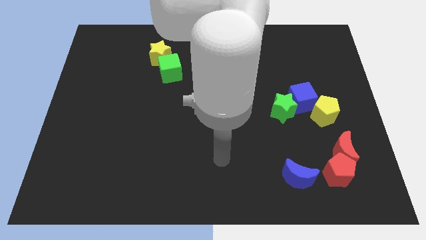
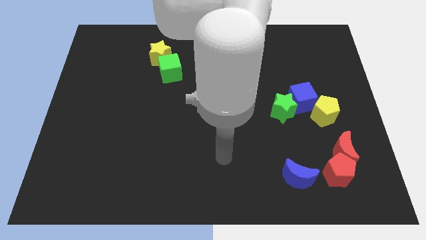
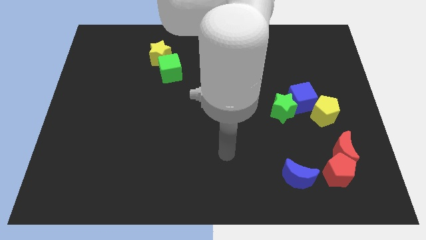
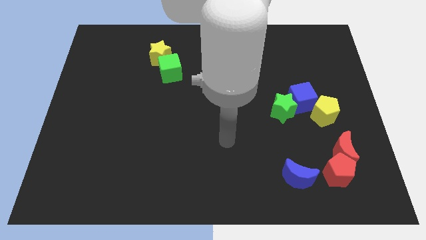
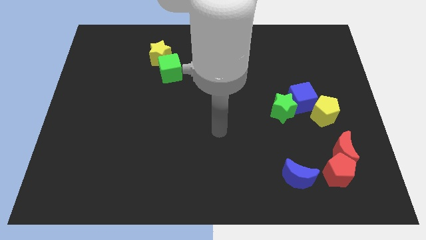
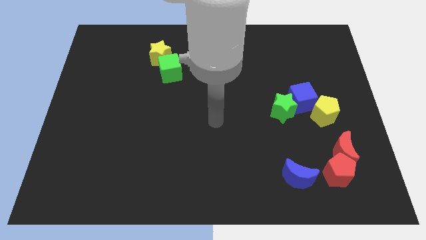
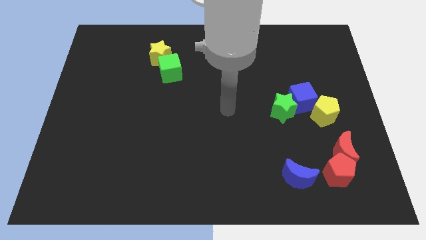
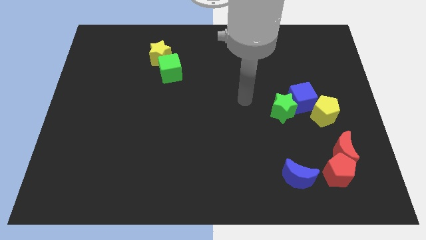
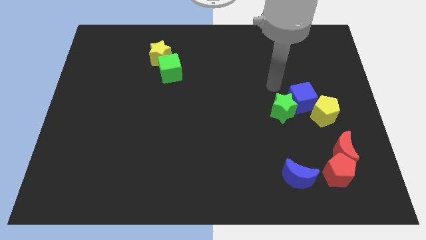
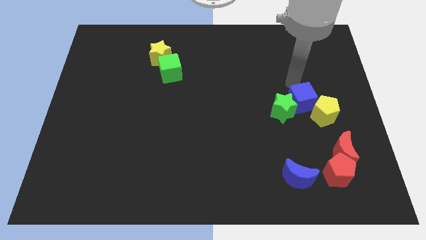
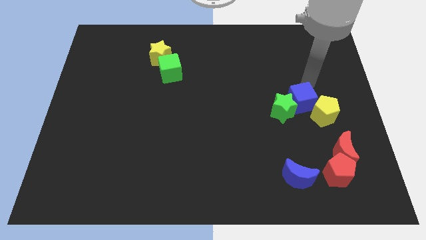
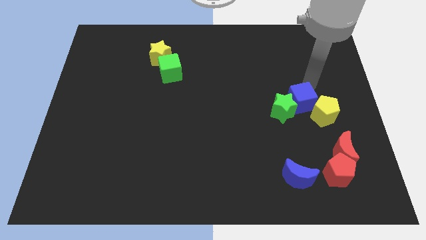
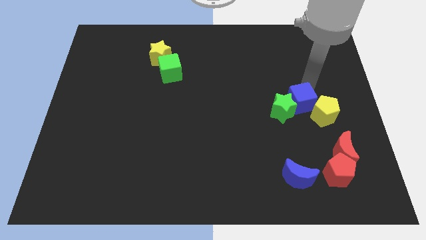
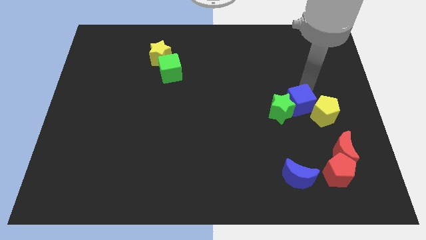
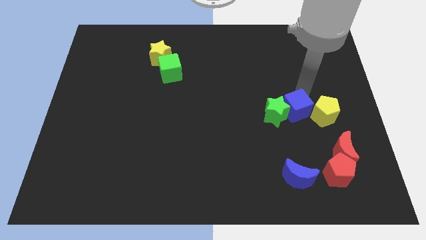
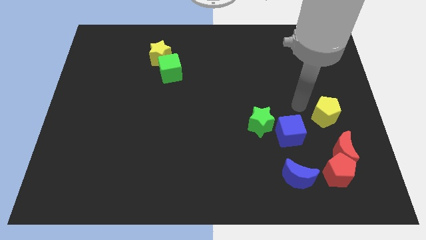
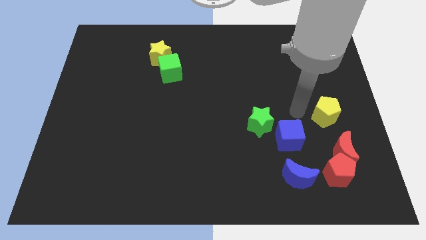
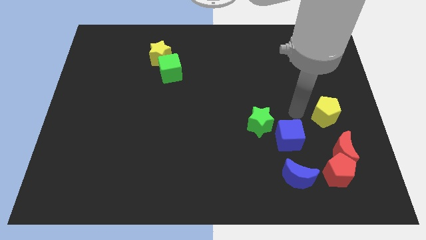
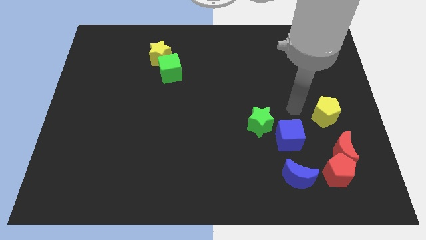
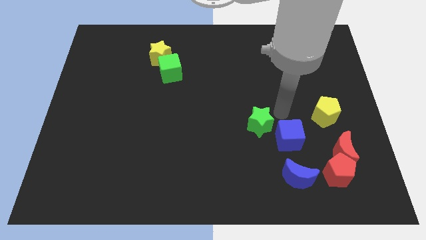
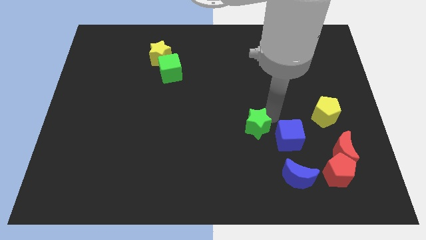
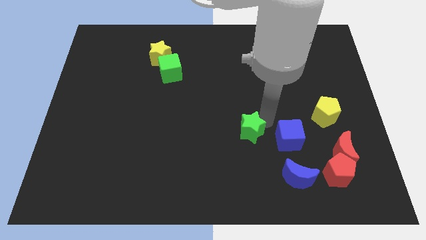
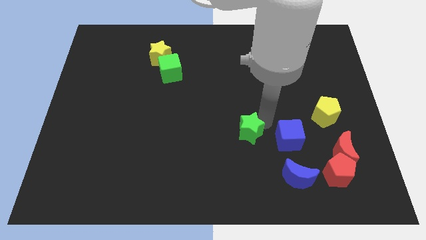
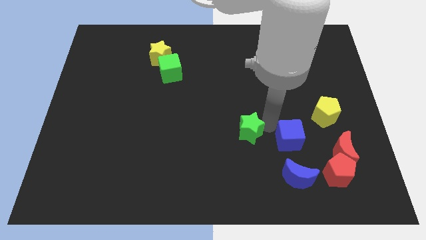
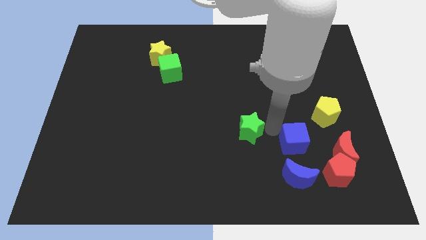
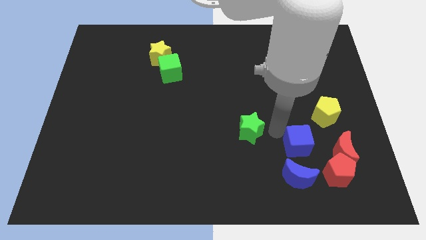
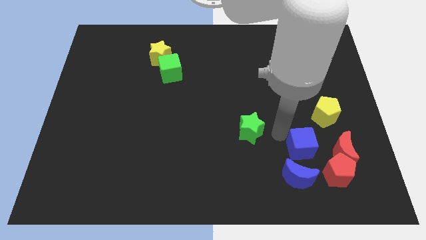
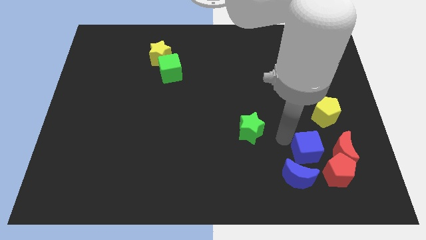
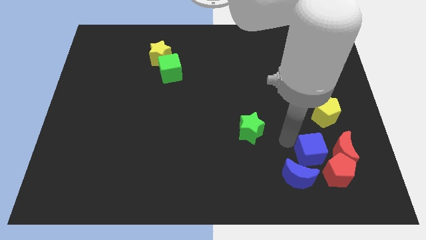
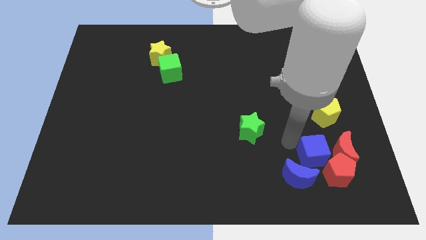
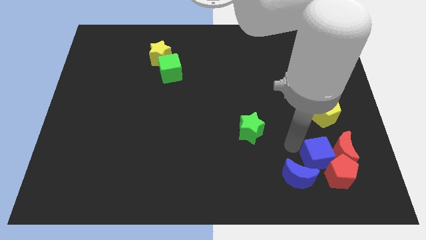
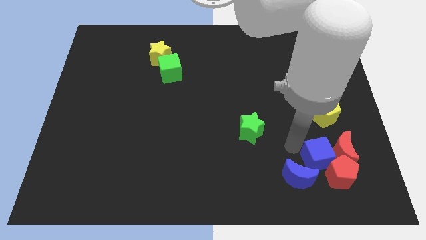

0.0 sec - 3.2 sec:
put the blue cube next to the red pentagon

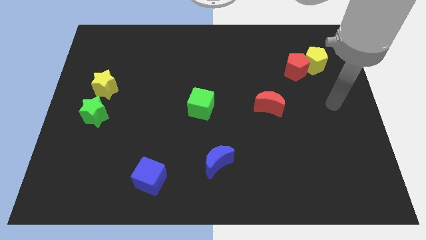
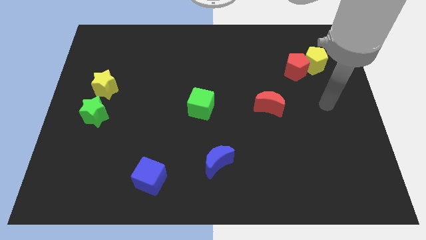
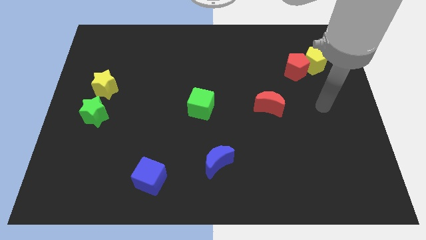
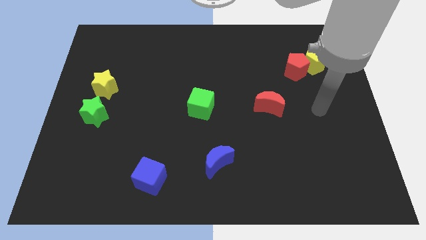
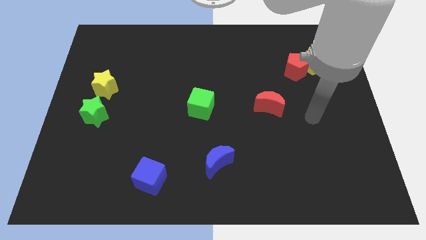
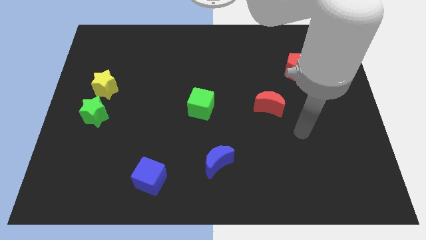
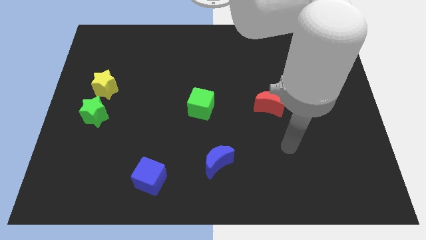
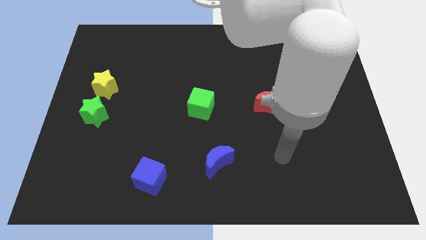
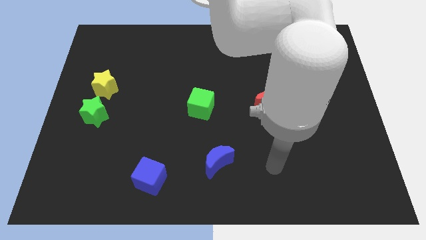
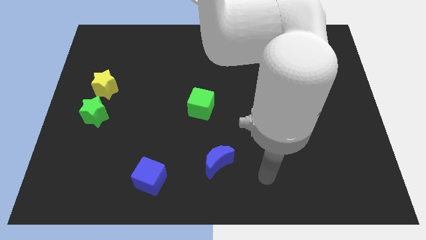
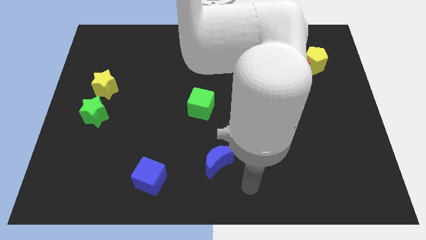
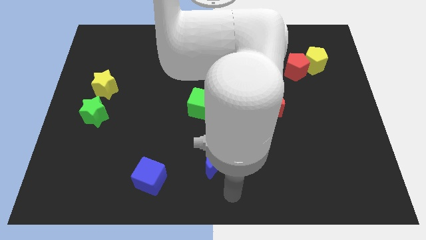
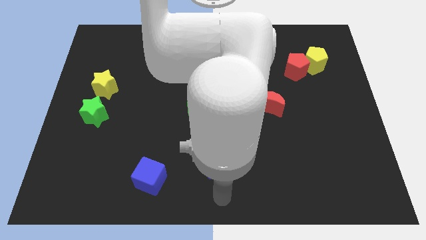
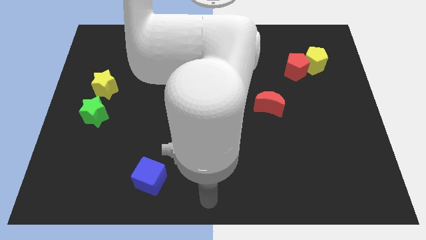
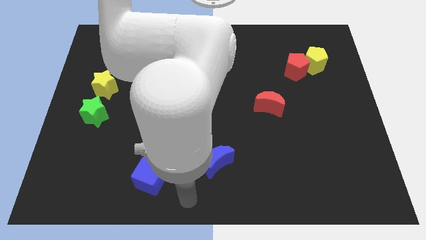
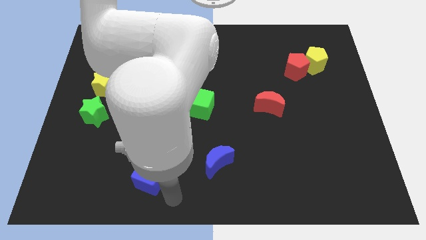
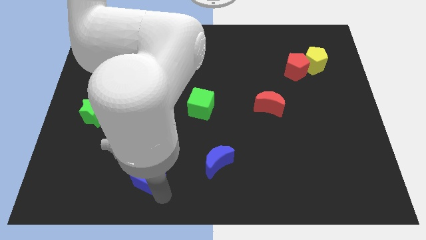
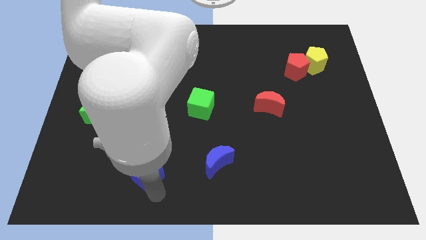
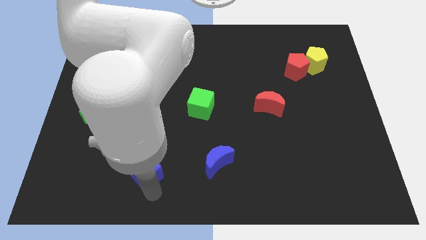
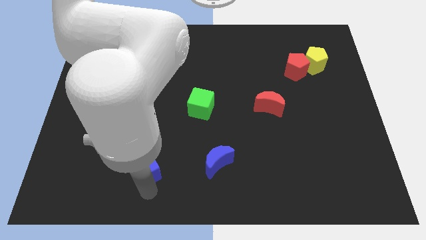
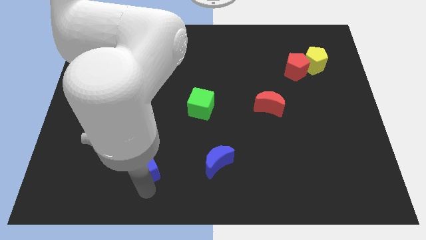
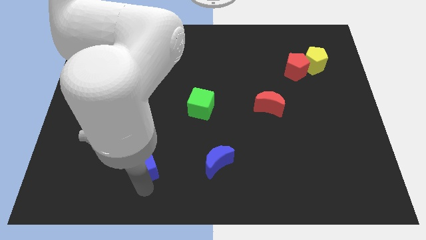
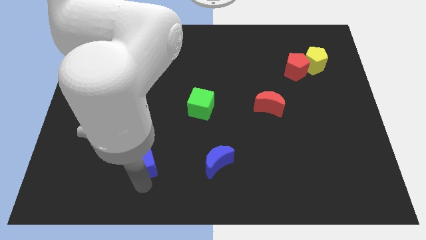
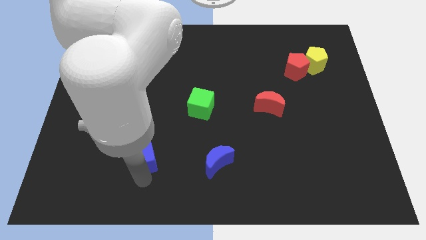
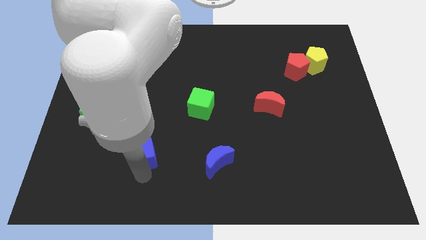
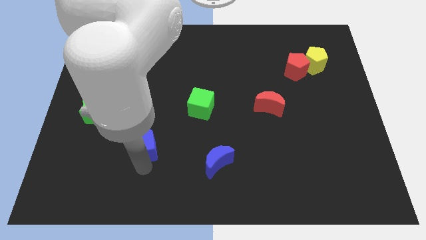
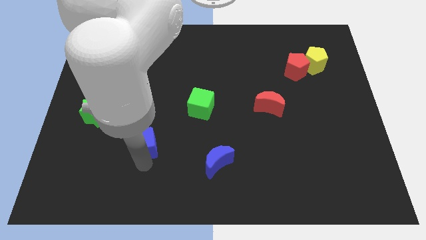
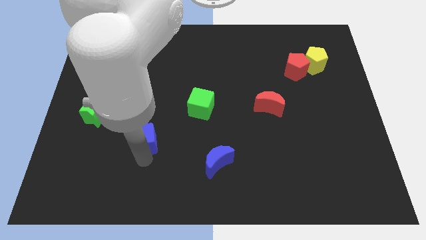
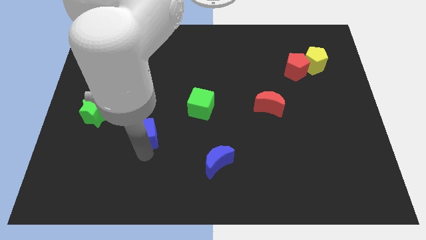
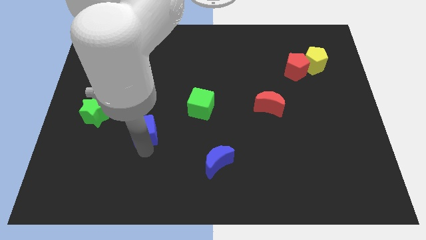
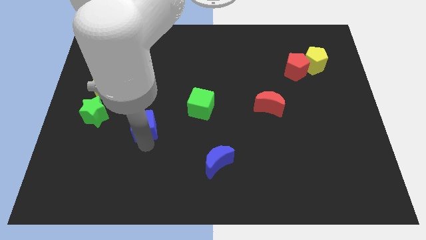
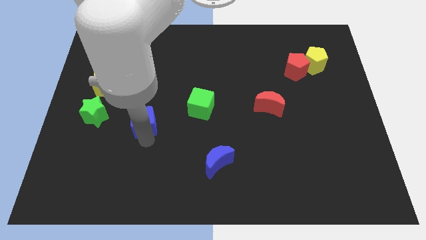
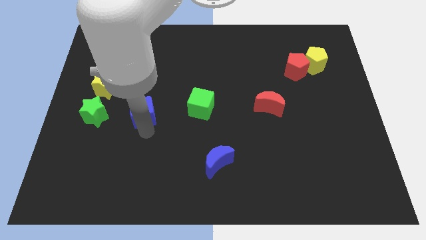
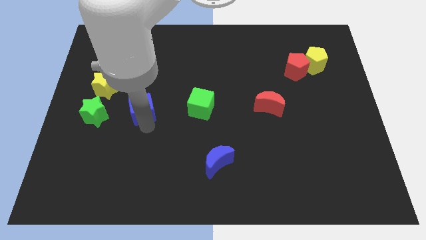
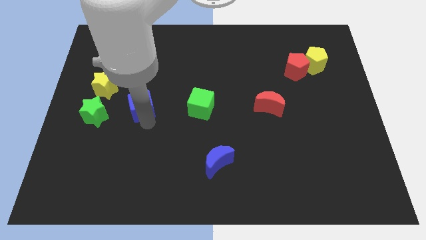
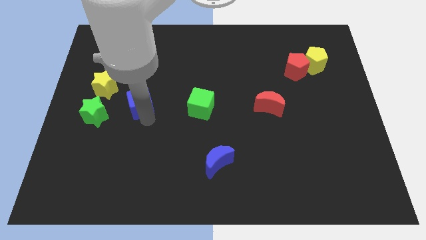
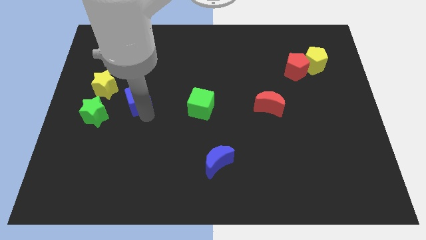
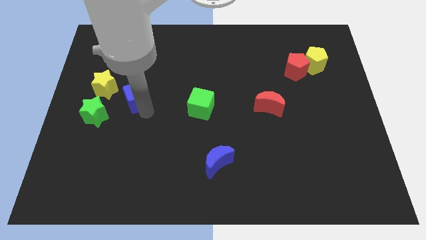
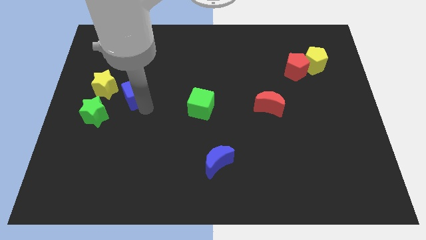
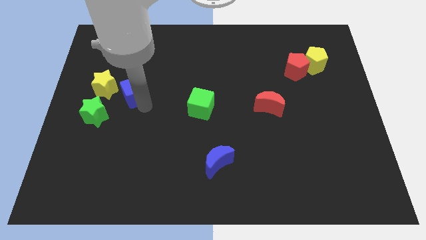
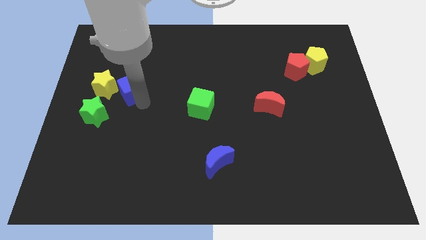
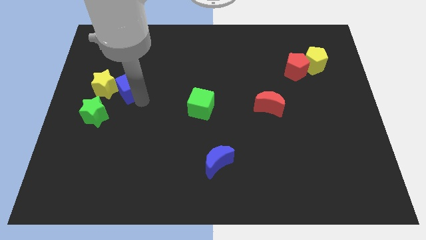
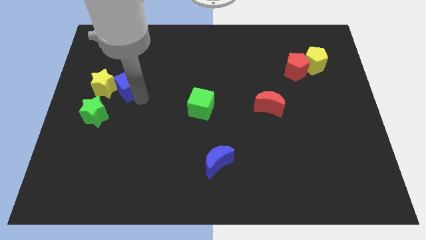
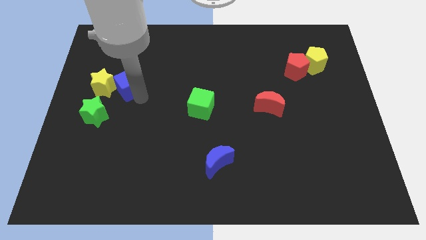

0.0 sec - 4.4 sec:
move the blue cube close to the yellow star

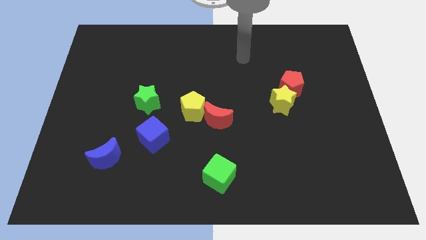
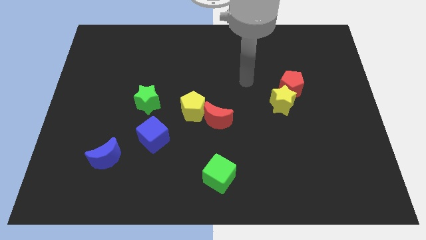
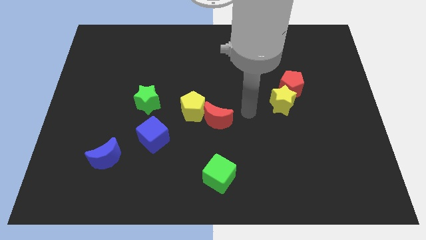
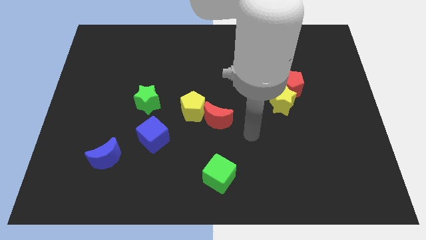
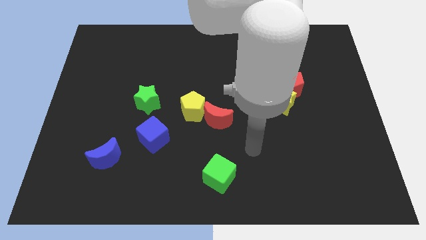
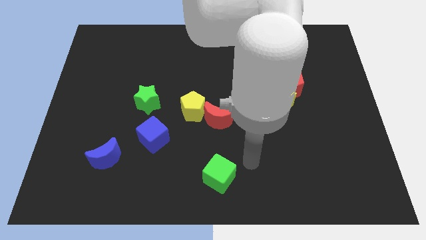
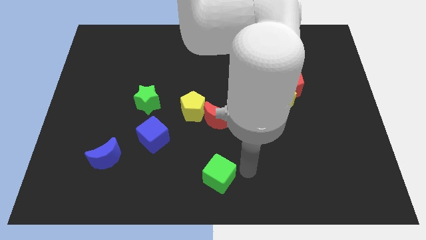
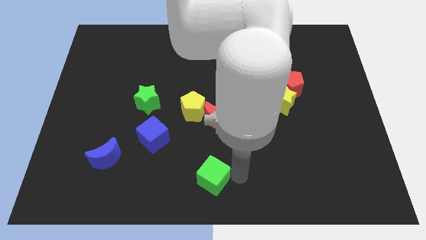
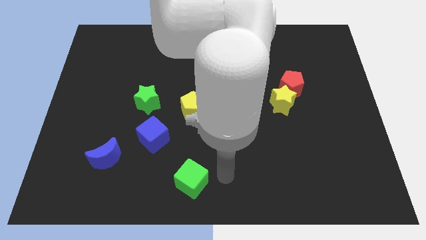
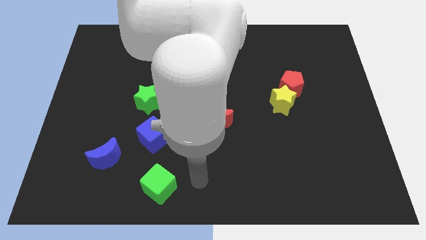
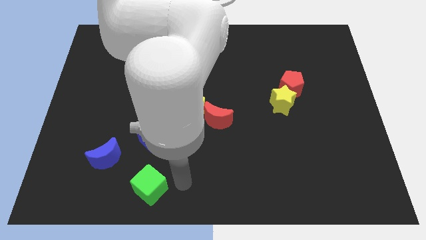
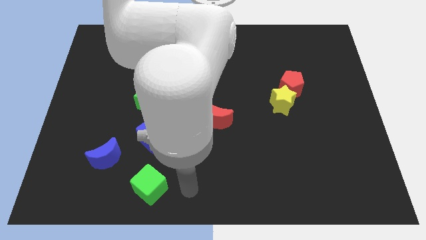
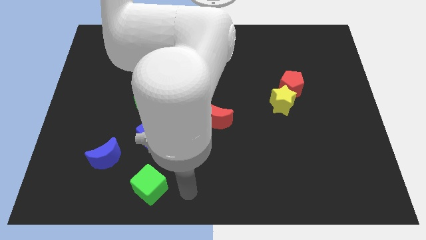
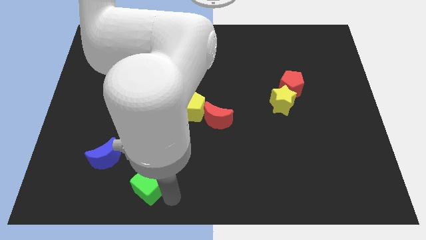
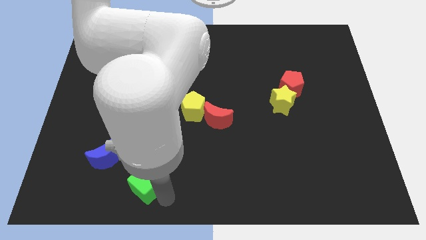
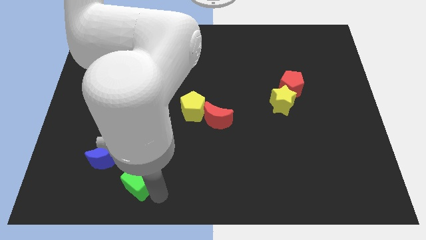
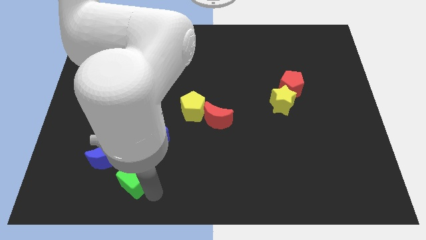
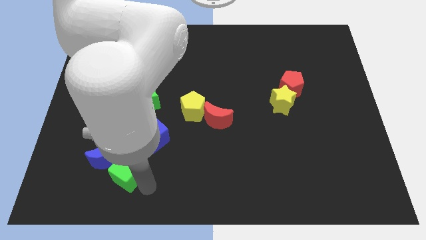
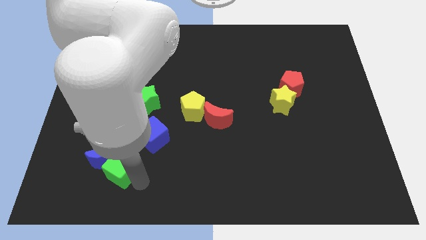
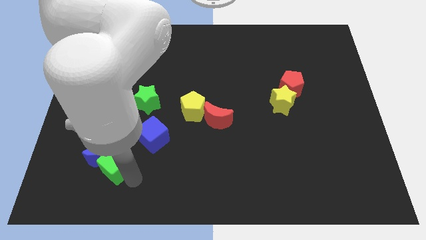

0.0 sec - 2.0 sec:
slide the green cube towards the blue moon
